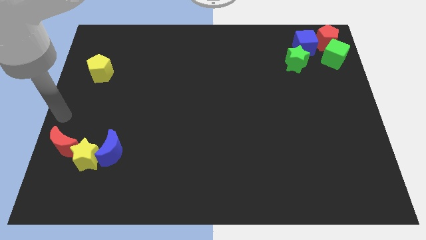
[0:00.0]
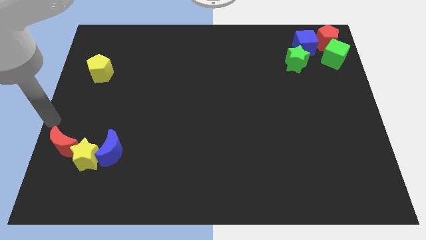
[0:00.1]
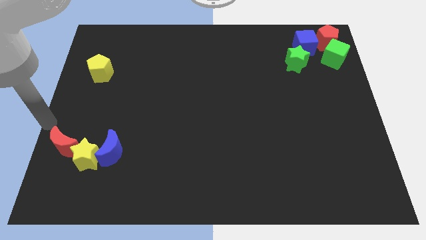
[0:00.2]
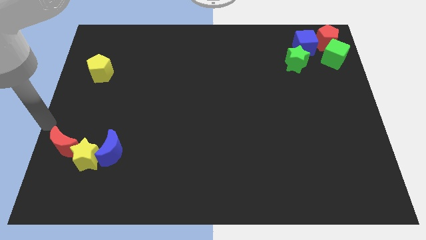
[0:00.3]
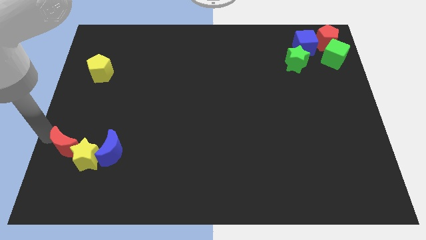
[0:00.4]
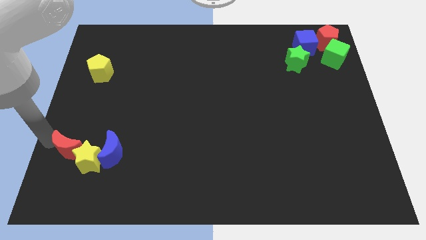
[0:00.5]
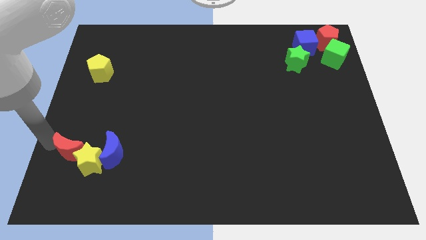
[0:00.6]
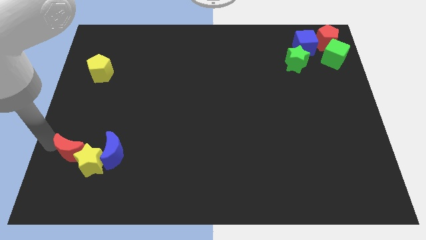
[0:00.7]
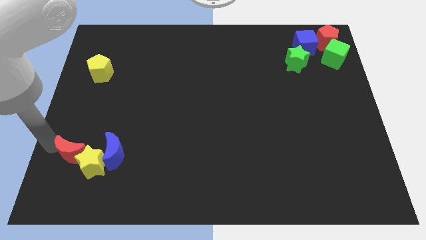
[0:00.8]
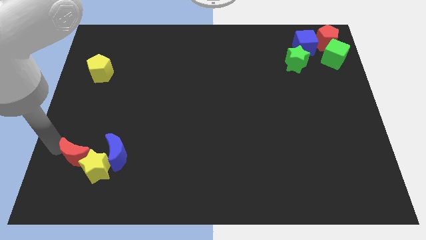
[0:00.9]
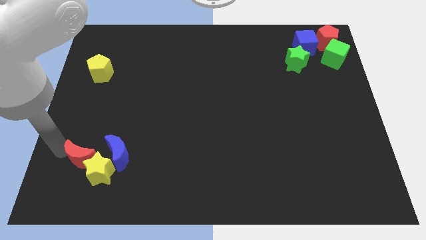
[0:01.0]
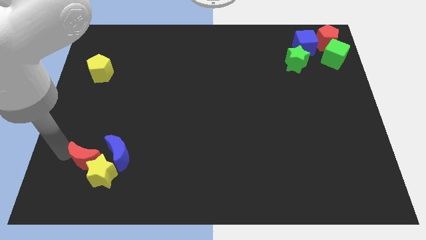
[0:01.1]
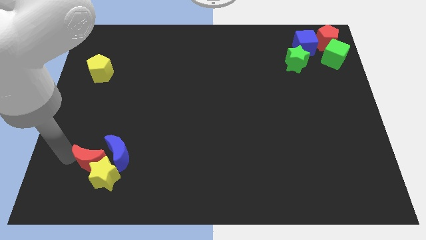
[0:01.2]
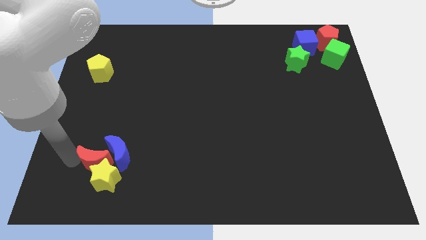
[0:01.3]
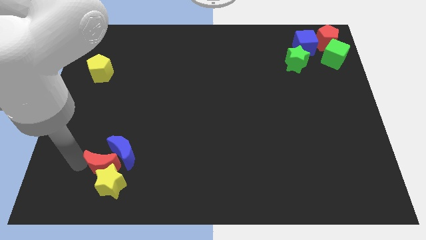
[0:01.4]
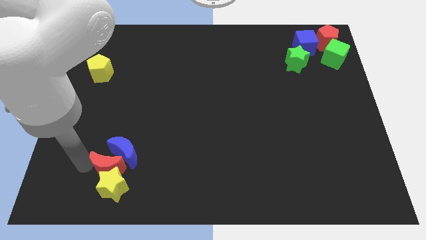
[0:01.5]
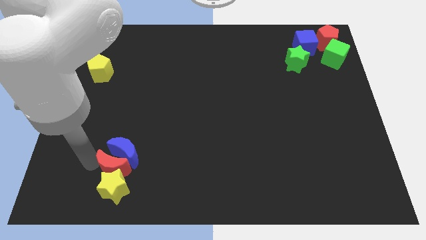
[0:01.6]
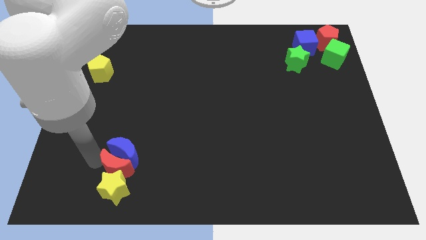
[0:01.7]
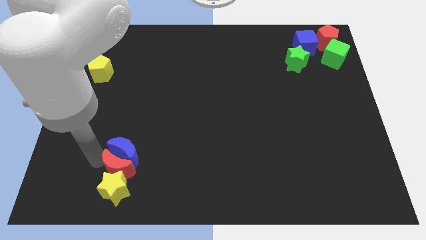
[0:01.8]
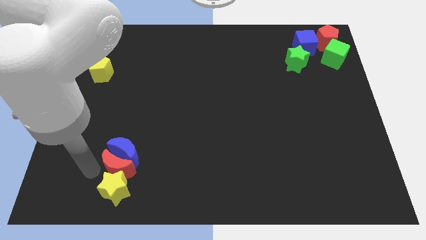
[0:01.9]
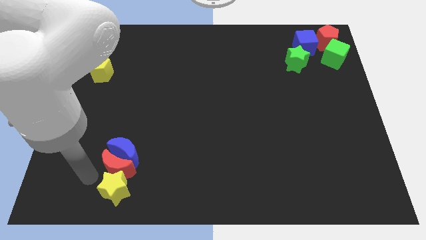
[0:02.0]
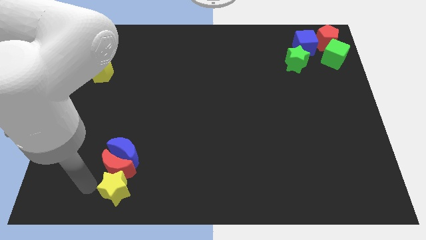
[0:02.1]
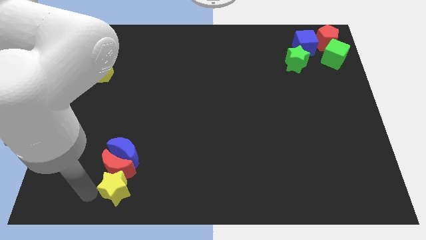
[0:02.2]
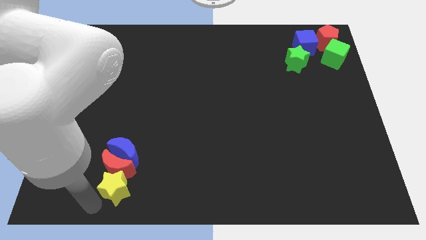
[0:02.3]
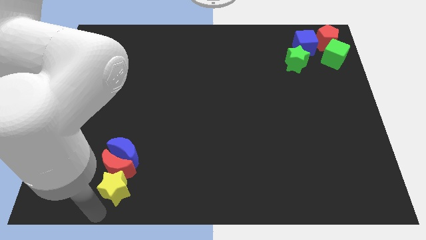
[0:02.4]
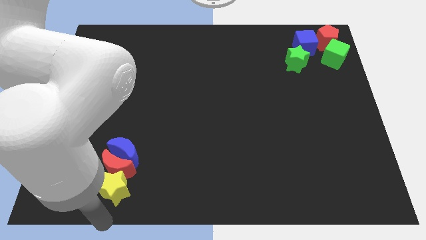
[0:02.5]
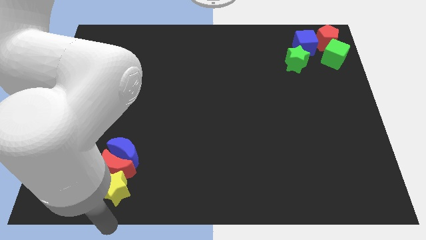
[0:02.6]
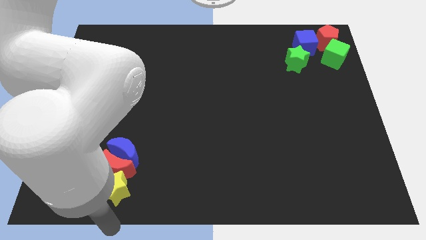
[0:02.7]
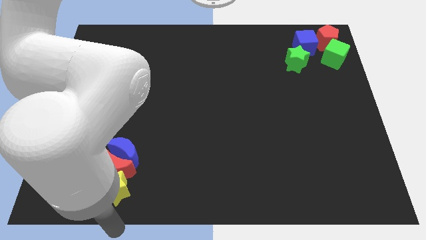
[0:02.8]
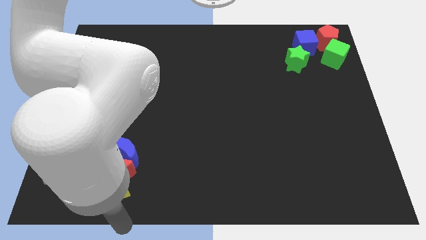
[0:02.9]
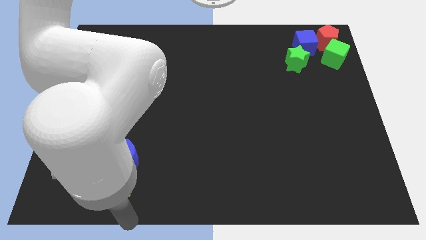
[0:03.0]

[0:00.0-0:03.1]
place blue crescentred crescentyellow star in a vertical line

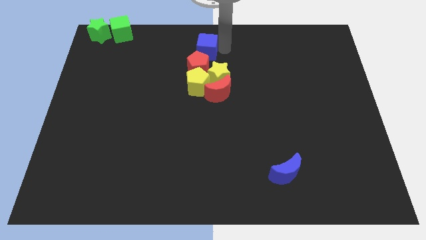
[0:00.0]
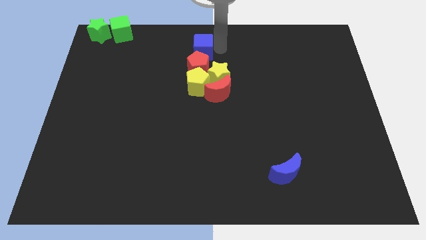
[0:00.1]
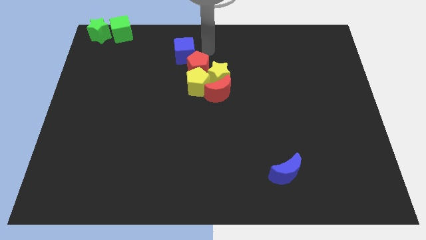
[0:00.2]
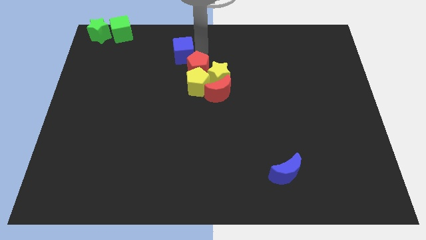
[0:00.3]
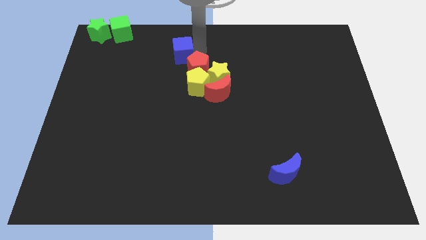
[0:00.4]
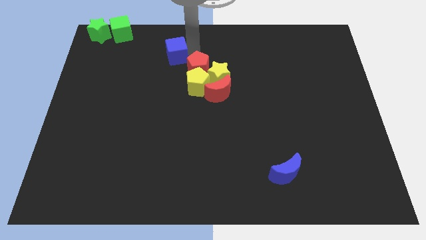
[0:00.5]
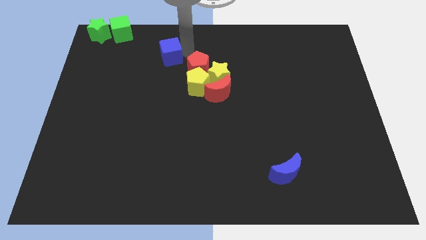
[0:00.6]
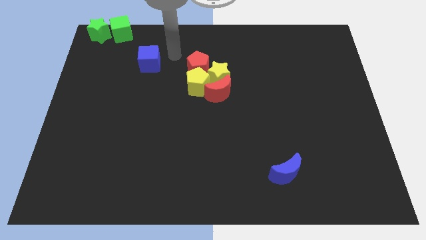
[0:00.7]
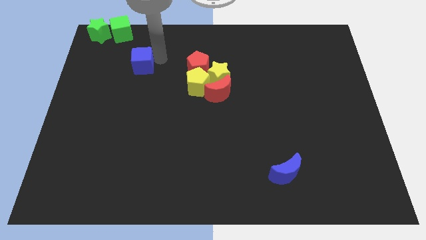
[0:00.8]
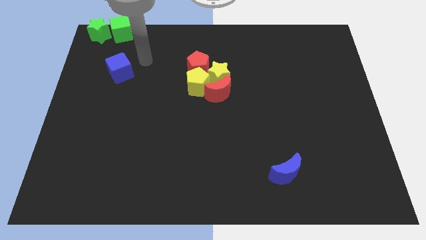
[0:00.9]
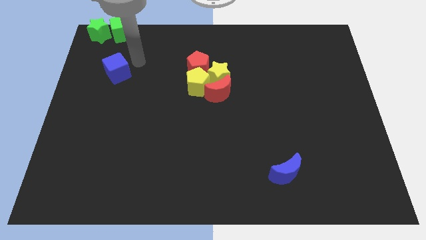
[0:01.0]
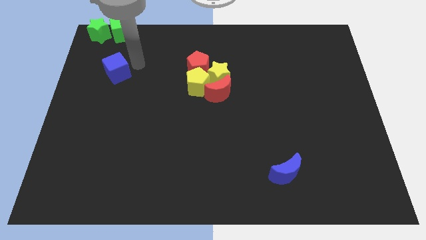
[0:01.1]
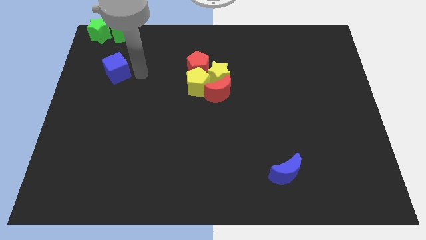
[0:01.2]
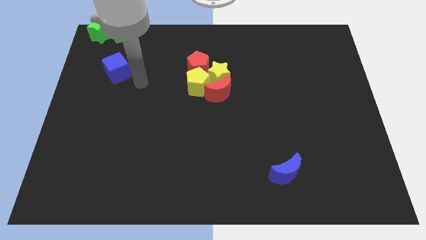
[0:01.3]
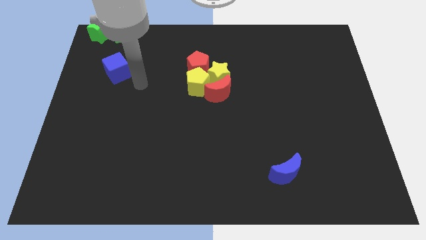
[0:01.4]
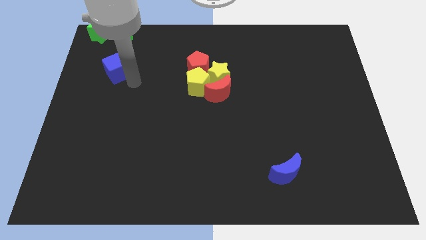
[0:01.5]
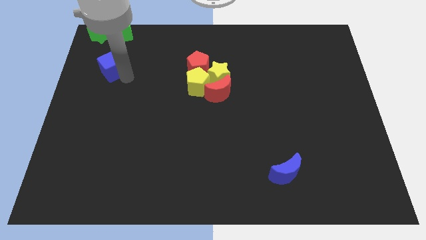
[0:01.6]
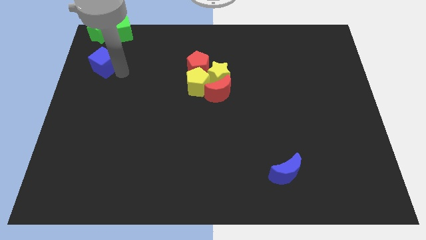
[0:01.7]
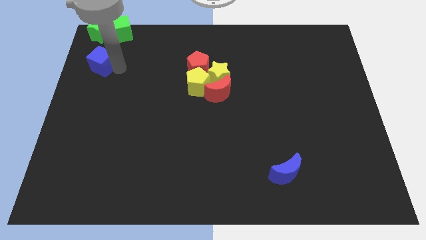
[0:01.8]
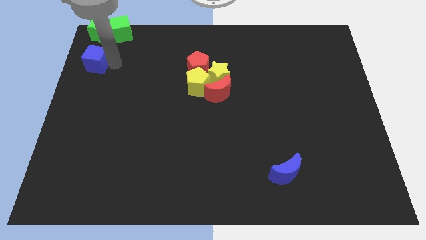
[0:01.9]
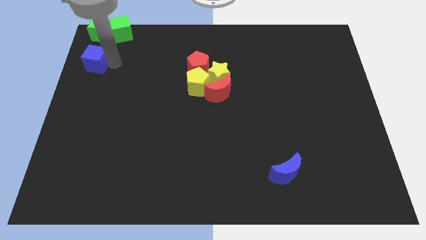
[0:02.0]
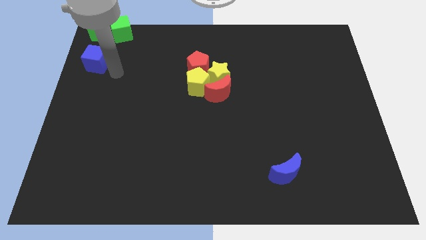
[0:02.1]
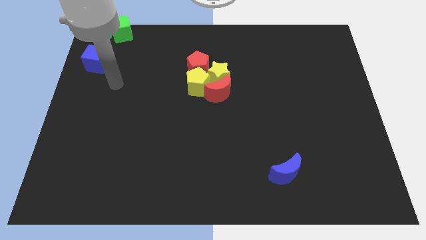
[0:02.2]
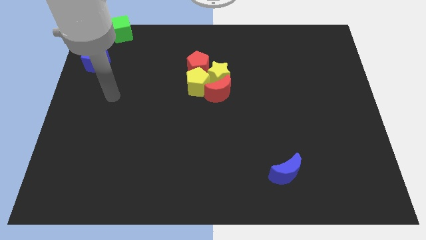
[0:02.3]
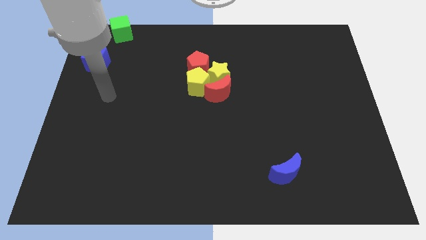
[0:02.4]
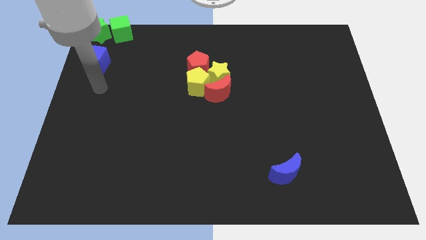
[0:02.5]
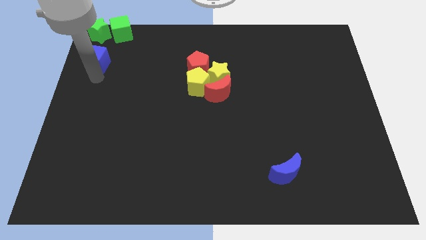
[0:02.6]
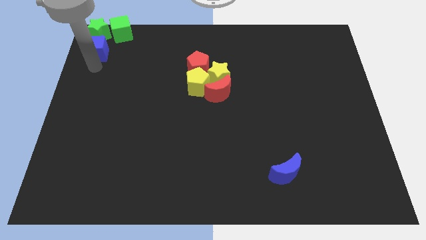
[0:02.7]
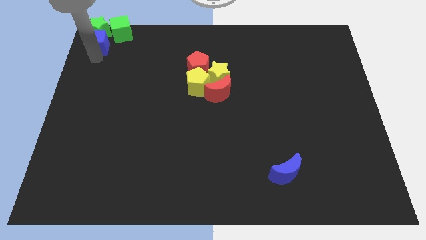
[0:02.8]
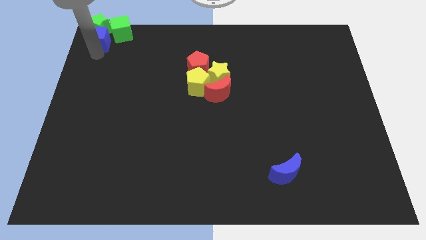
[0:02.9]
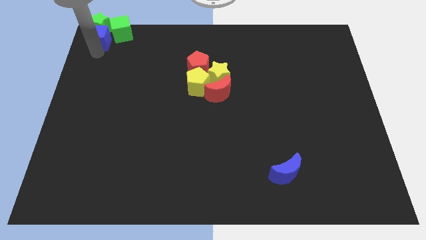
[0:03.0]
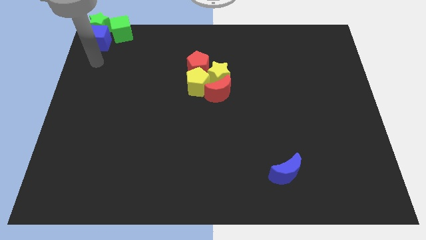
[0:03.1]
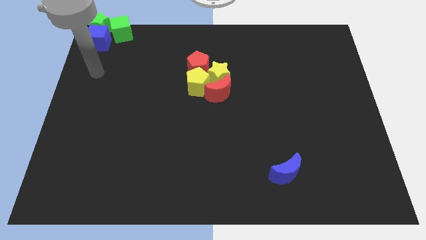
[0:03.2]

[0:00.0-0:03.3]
push the blue cube to the bottom side of the green star

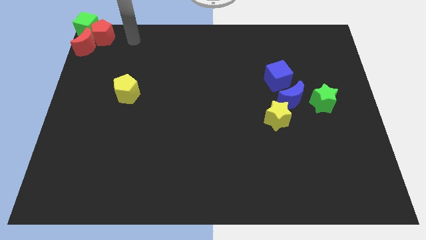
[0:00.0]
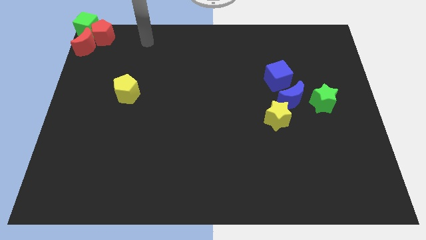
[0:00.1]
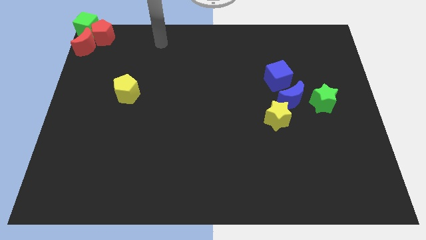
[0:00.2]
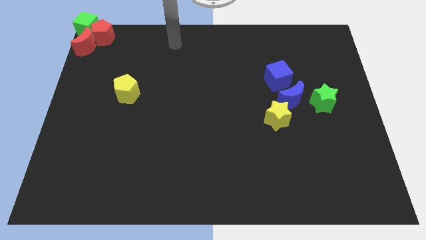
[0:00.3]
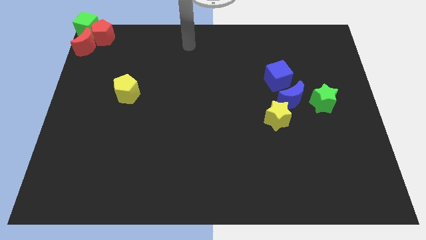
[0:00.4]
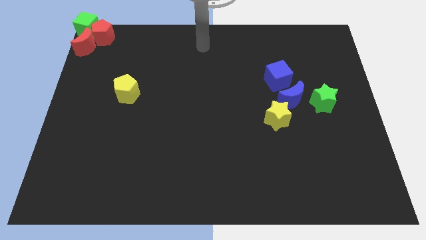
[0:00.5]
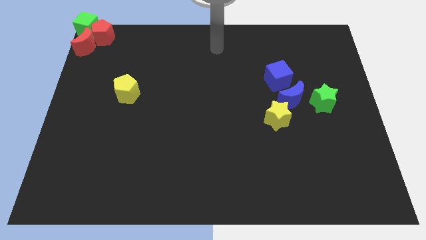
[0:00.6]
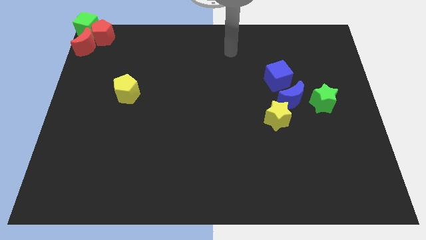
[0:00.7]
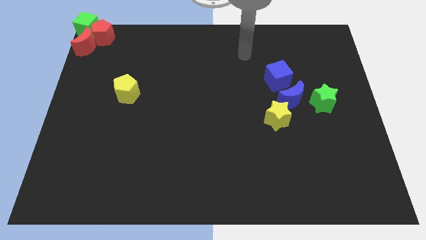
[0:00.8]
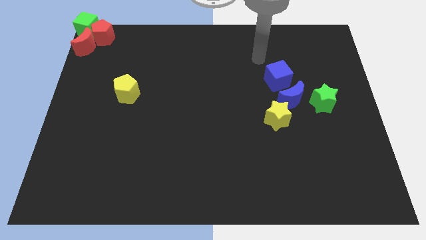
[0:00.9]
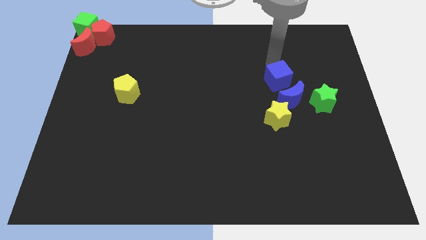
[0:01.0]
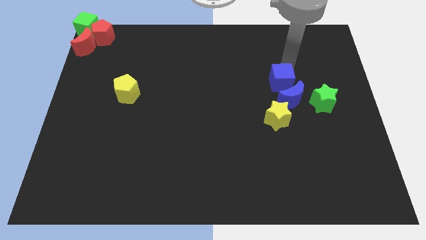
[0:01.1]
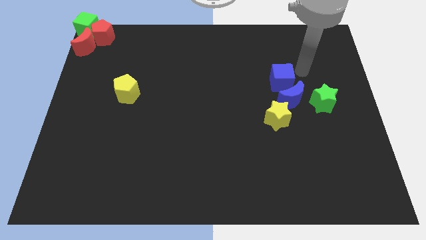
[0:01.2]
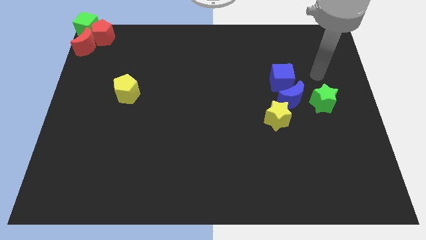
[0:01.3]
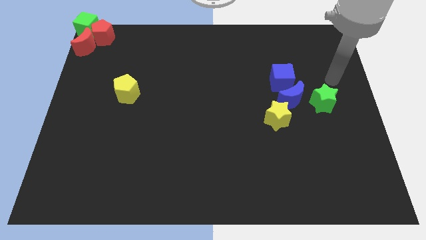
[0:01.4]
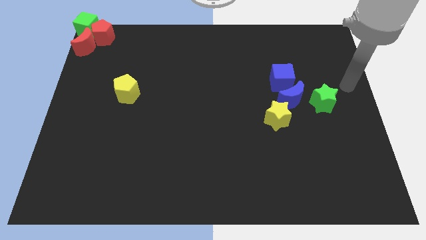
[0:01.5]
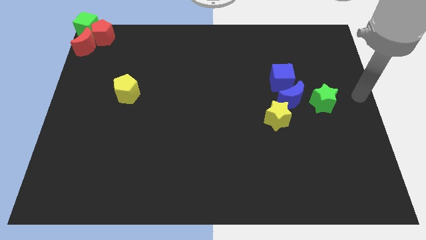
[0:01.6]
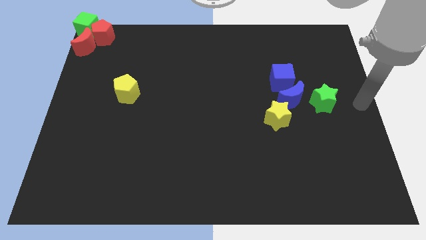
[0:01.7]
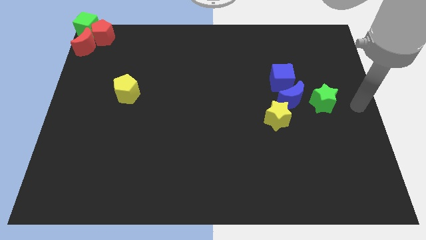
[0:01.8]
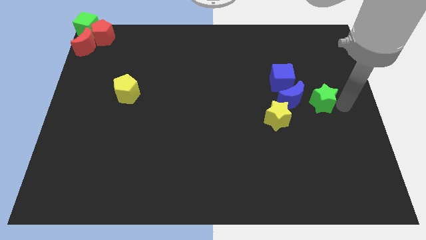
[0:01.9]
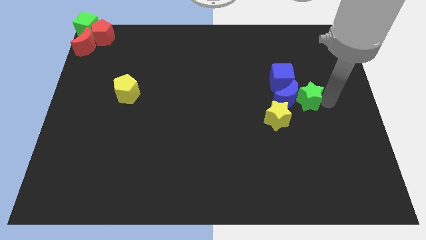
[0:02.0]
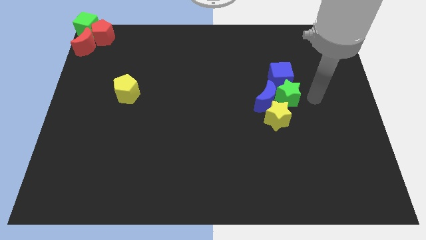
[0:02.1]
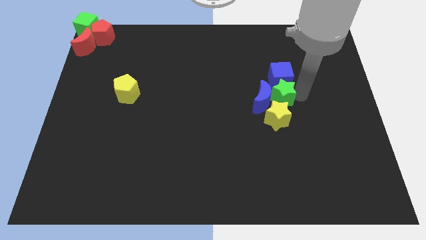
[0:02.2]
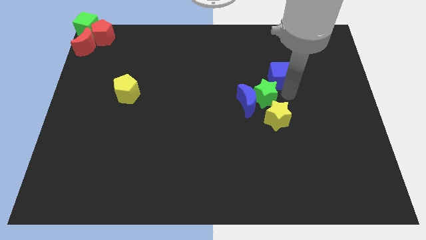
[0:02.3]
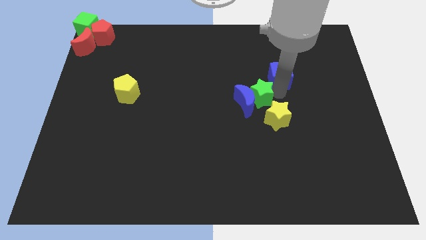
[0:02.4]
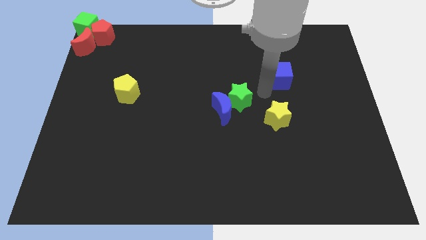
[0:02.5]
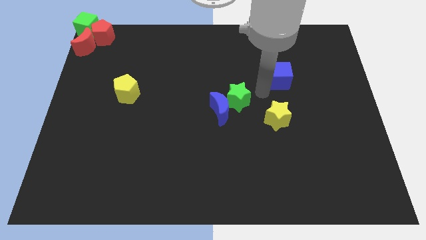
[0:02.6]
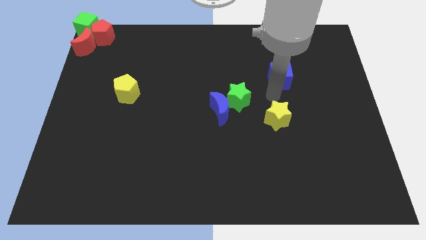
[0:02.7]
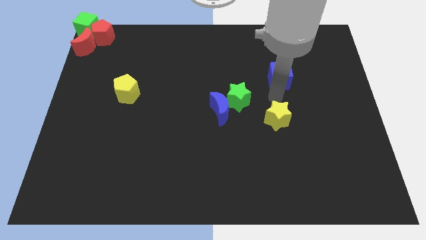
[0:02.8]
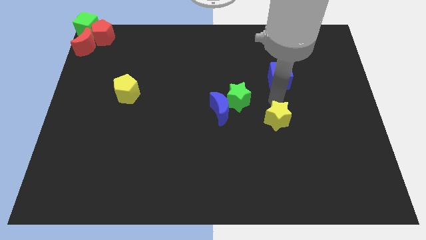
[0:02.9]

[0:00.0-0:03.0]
slide the green star along with the blue moon to the center of the board
